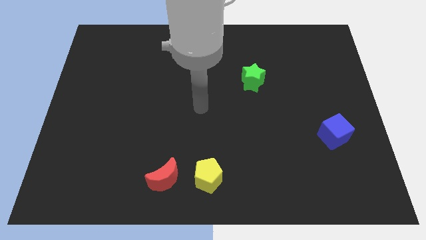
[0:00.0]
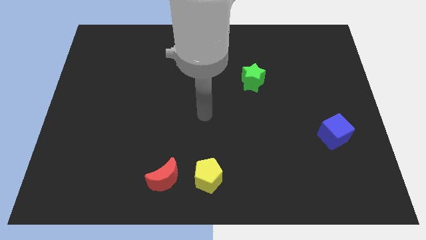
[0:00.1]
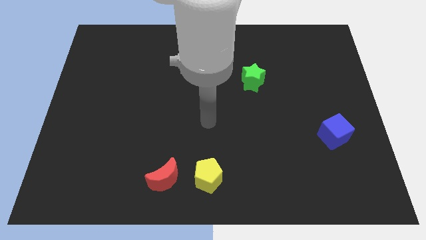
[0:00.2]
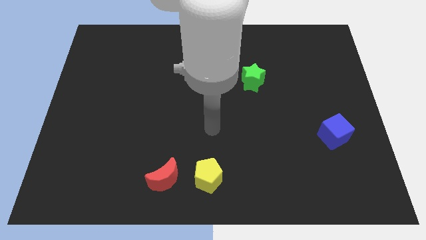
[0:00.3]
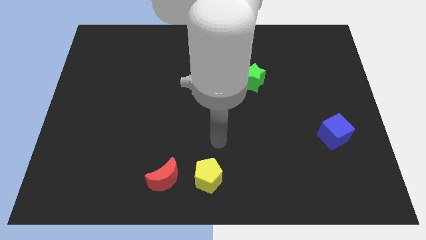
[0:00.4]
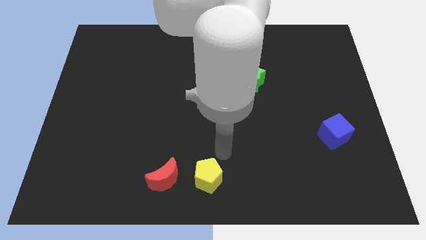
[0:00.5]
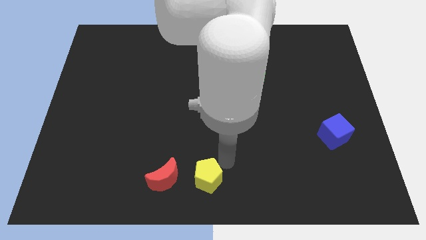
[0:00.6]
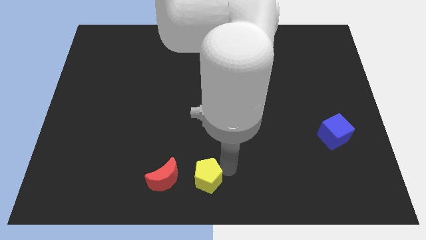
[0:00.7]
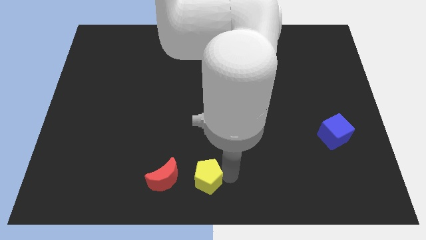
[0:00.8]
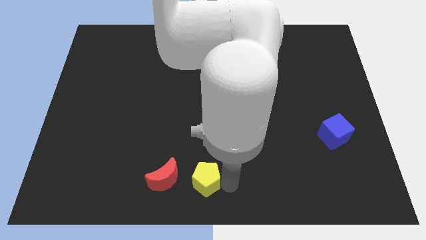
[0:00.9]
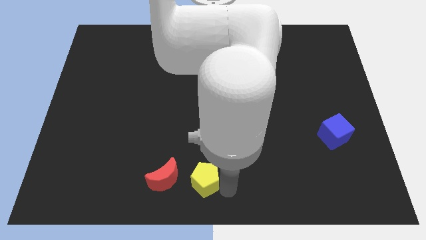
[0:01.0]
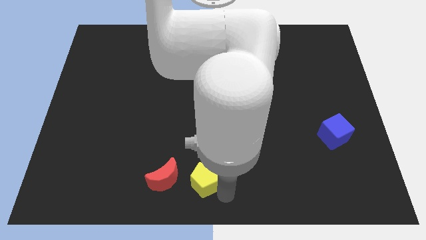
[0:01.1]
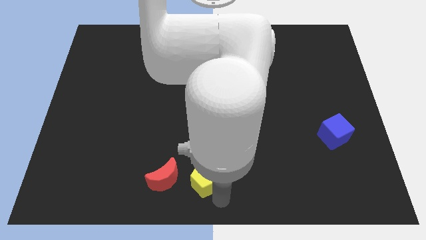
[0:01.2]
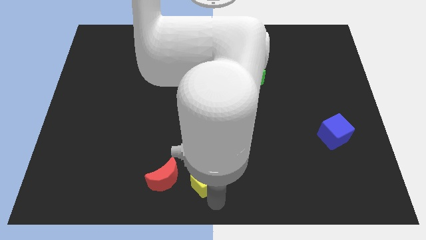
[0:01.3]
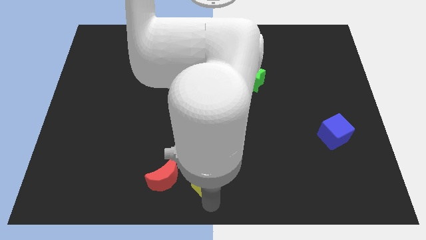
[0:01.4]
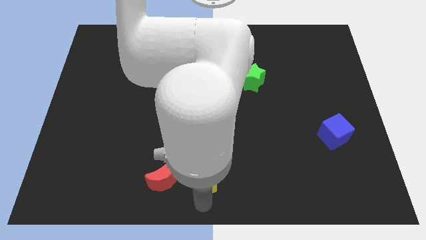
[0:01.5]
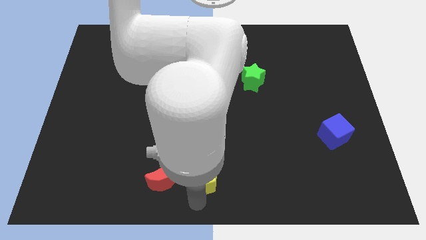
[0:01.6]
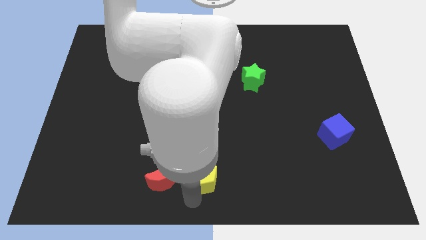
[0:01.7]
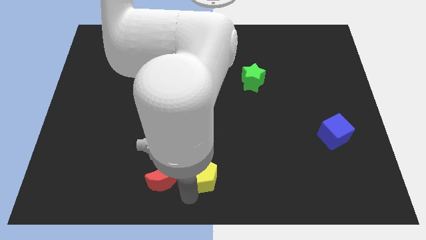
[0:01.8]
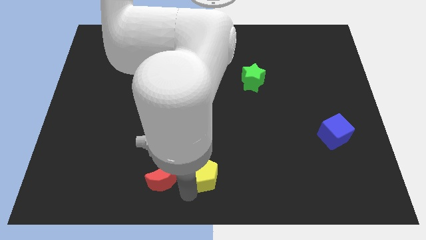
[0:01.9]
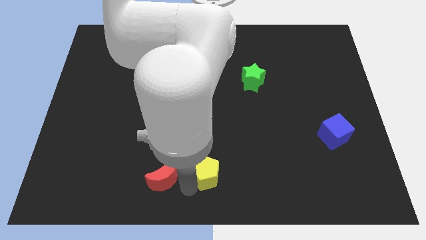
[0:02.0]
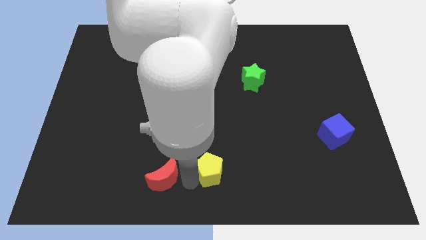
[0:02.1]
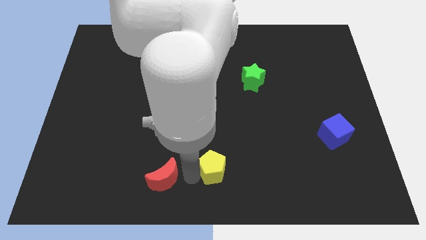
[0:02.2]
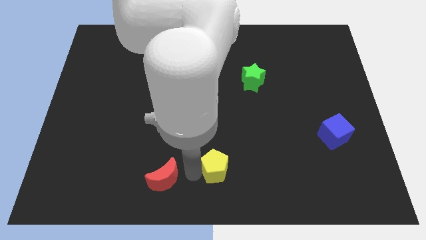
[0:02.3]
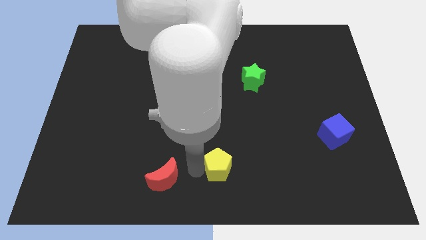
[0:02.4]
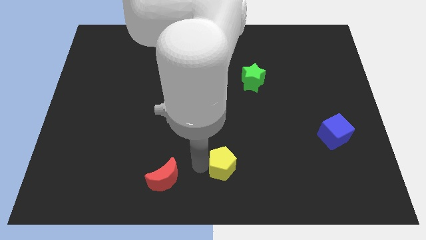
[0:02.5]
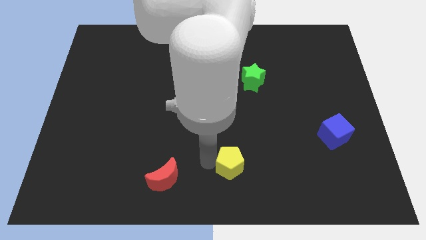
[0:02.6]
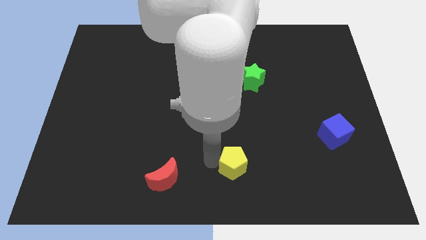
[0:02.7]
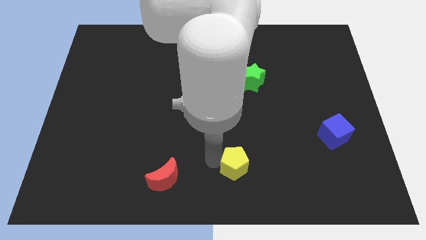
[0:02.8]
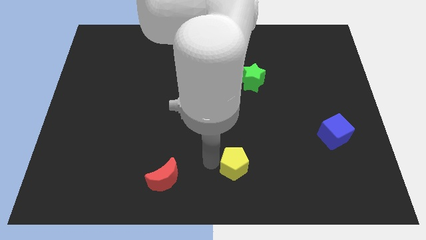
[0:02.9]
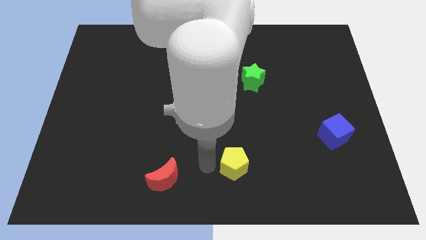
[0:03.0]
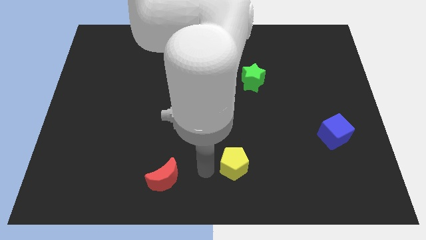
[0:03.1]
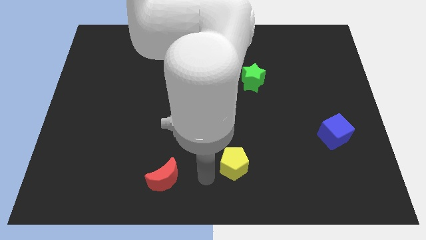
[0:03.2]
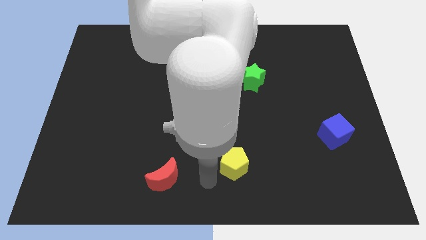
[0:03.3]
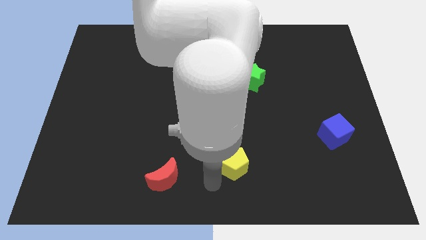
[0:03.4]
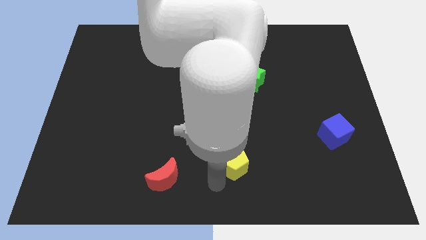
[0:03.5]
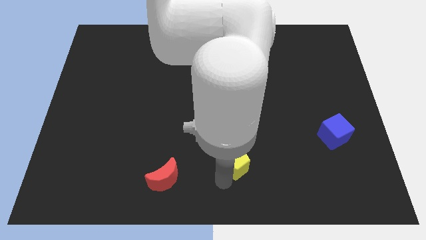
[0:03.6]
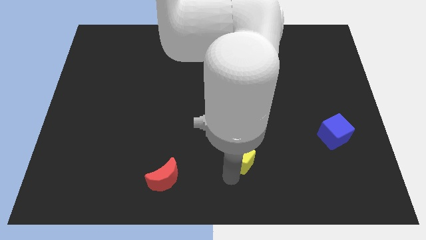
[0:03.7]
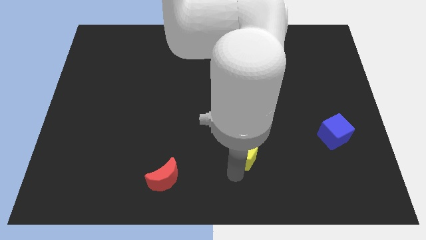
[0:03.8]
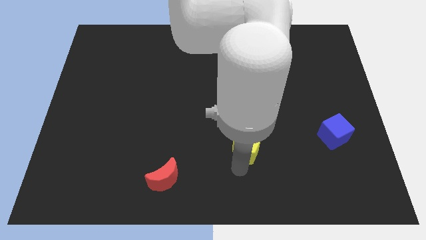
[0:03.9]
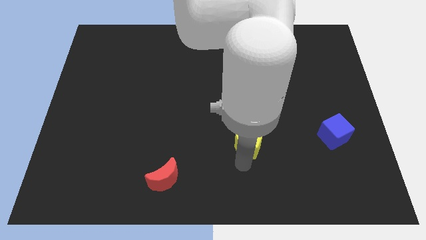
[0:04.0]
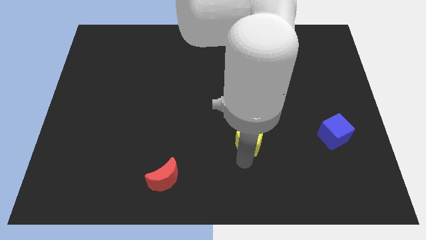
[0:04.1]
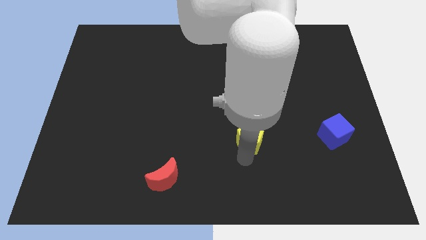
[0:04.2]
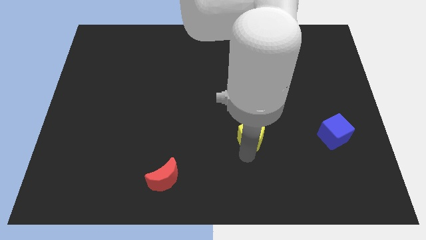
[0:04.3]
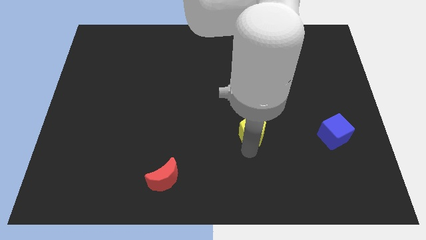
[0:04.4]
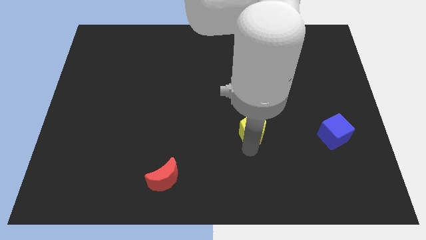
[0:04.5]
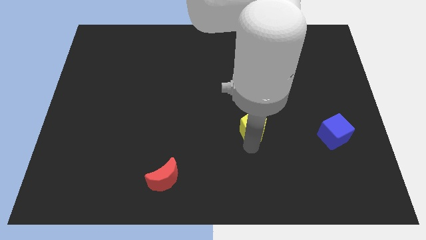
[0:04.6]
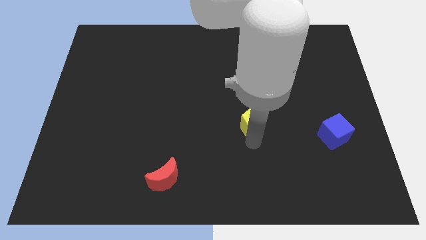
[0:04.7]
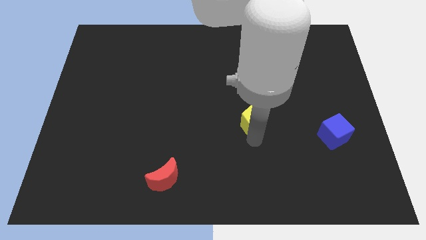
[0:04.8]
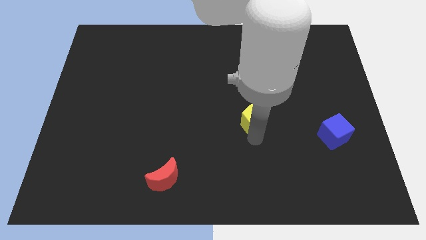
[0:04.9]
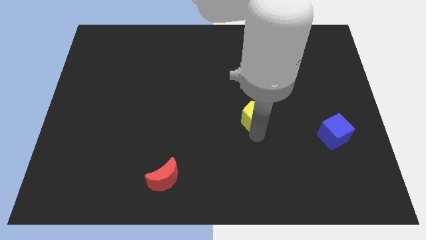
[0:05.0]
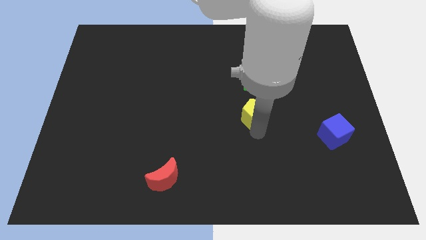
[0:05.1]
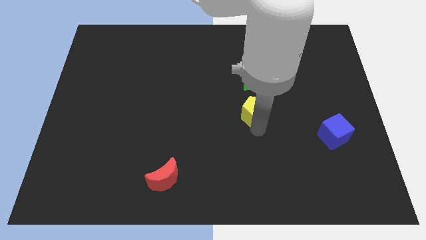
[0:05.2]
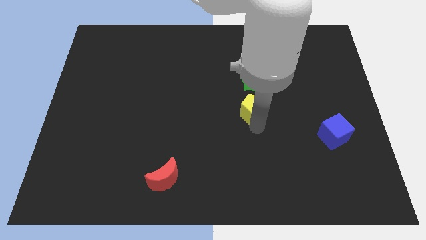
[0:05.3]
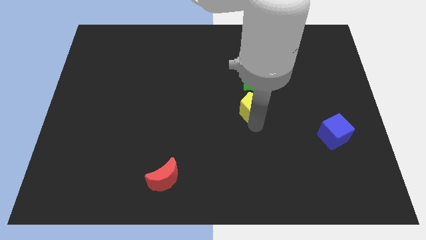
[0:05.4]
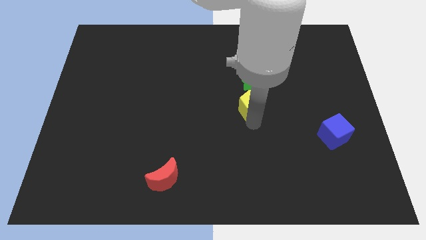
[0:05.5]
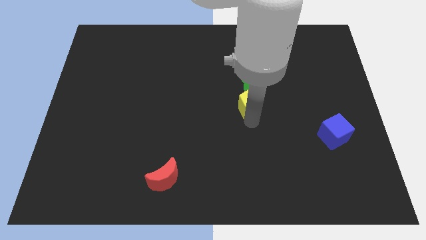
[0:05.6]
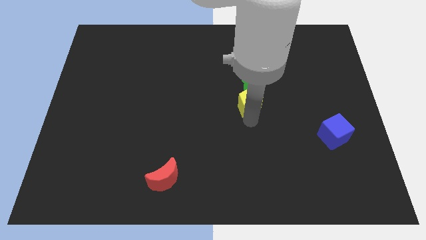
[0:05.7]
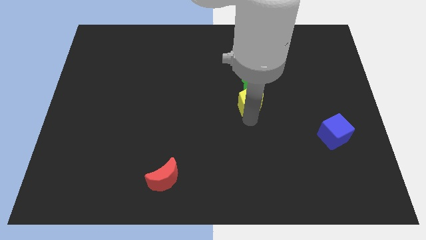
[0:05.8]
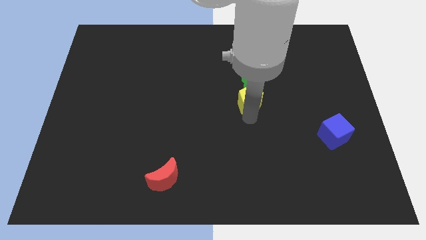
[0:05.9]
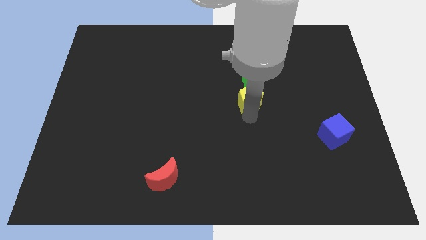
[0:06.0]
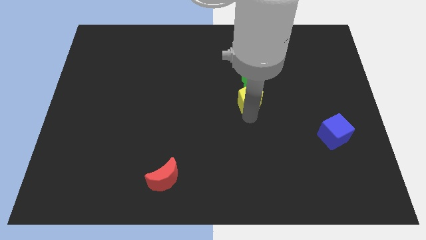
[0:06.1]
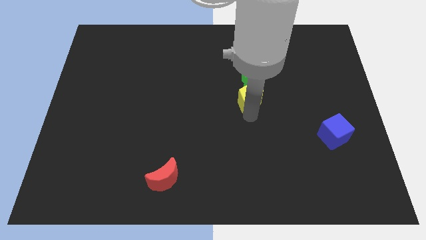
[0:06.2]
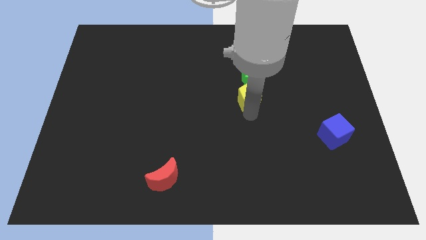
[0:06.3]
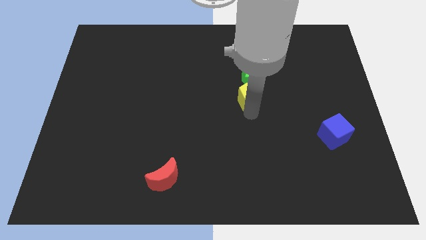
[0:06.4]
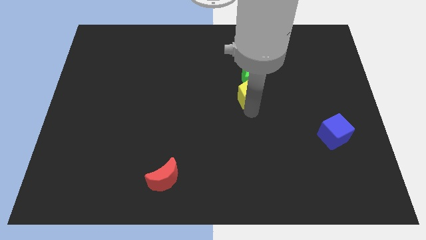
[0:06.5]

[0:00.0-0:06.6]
put the pentagon close to the green block

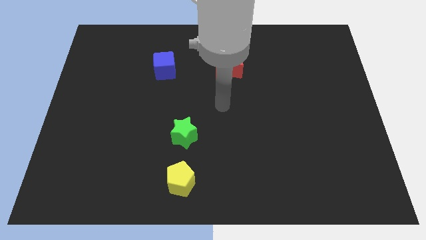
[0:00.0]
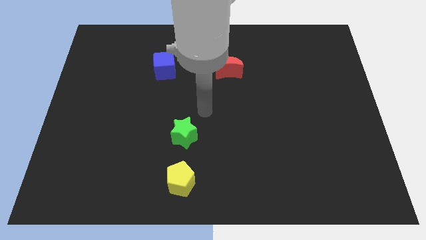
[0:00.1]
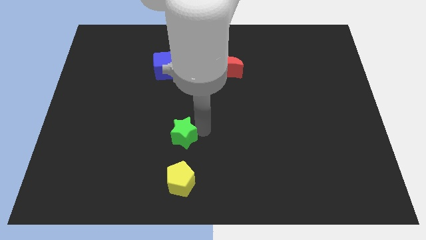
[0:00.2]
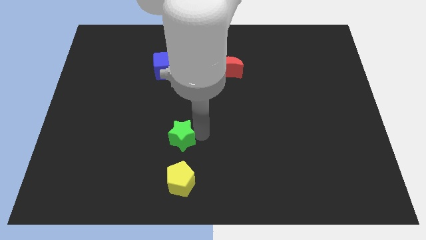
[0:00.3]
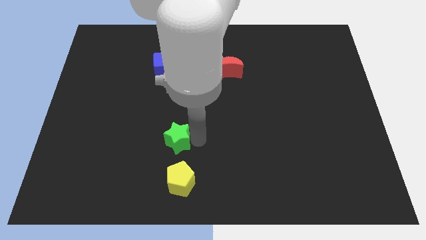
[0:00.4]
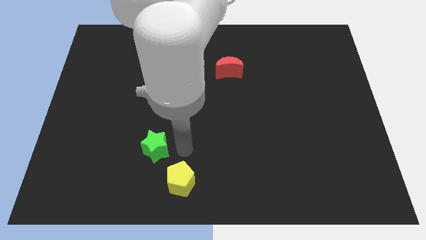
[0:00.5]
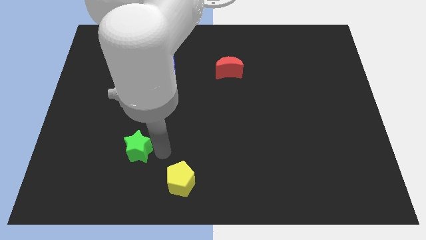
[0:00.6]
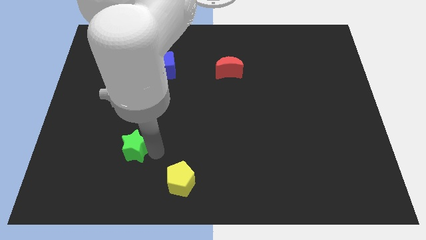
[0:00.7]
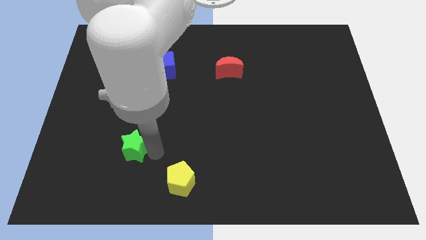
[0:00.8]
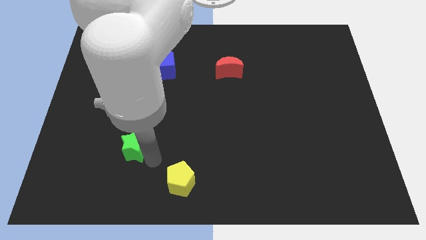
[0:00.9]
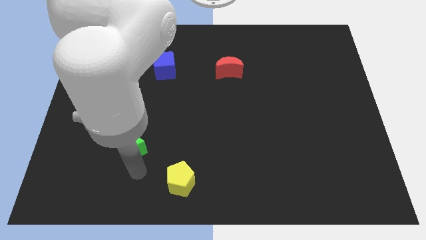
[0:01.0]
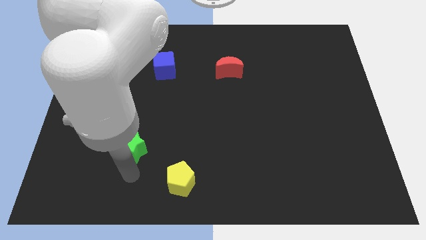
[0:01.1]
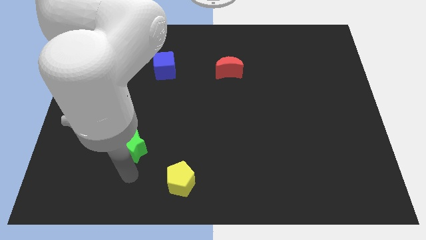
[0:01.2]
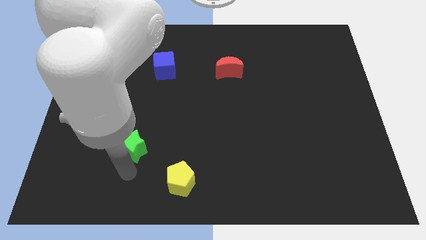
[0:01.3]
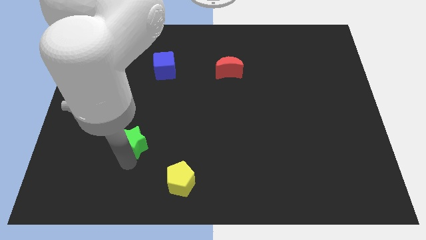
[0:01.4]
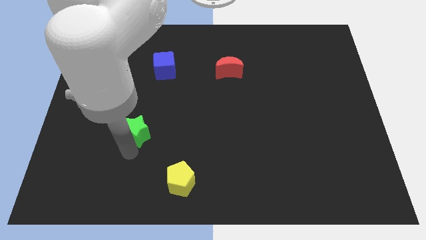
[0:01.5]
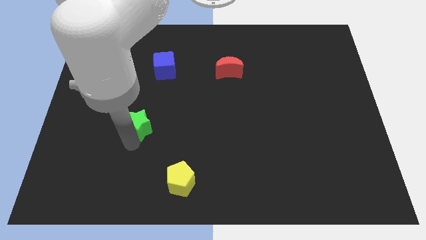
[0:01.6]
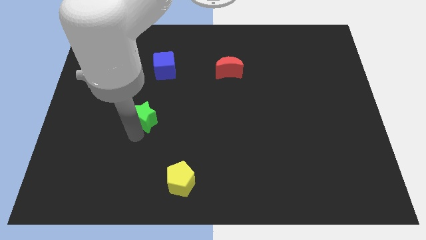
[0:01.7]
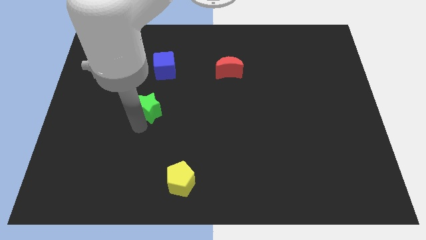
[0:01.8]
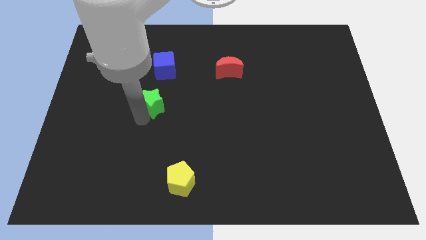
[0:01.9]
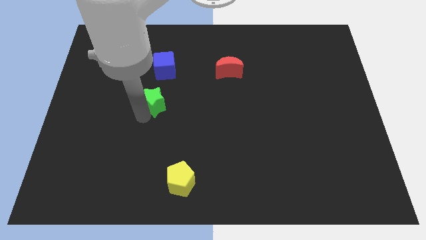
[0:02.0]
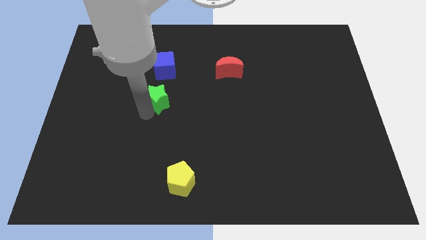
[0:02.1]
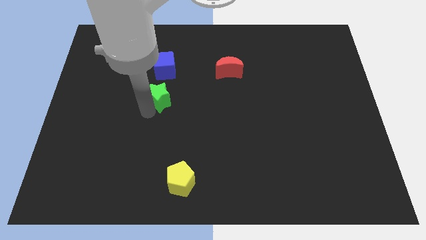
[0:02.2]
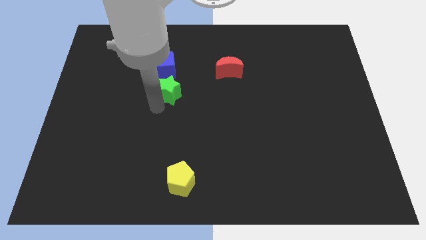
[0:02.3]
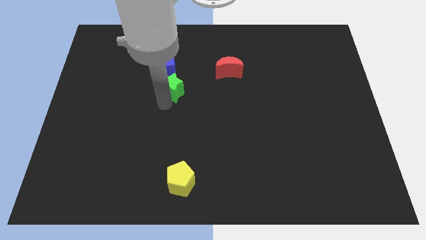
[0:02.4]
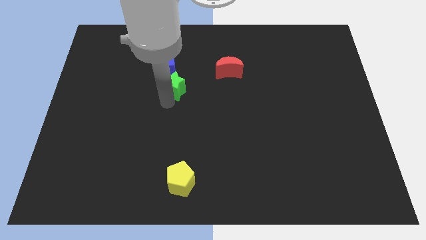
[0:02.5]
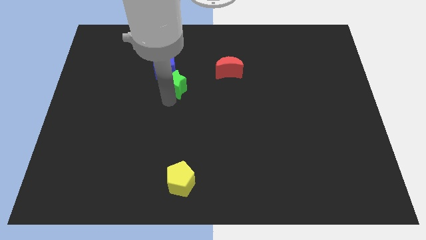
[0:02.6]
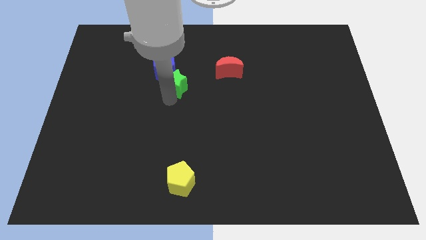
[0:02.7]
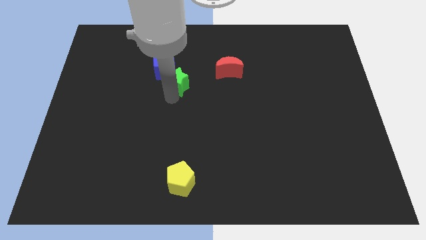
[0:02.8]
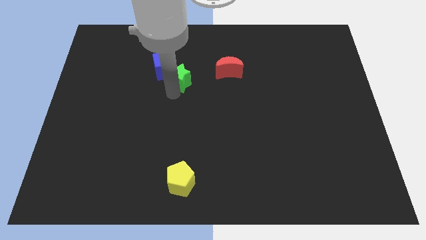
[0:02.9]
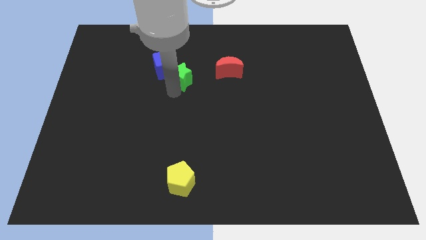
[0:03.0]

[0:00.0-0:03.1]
move the green star to the cube
